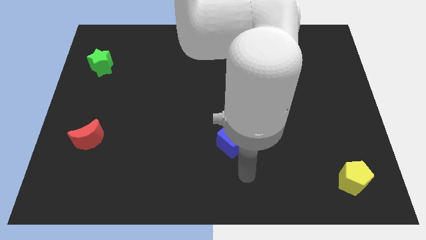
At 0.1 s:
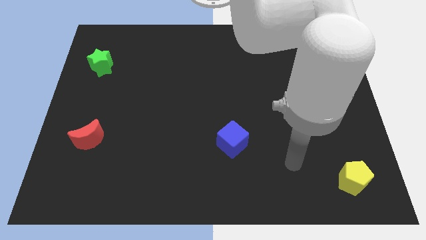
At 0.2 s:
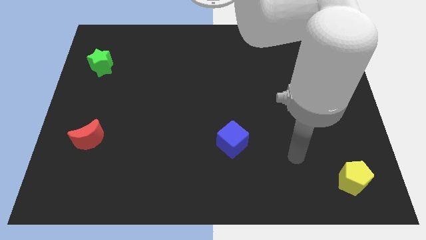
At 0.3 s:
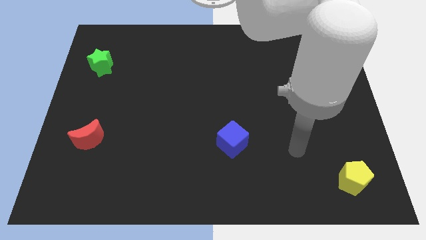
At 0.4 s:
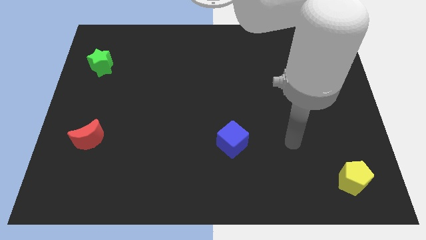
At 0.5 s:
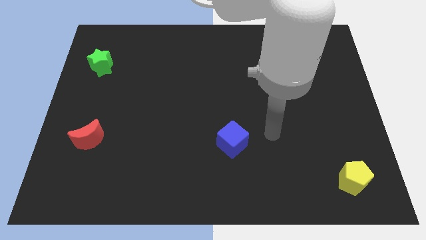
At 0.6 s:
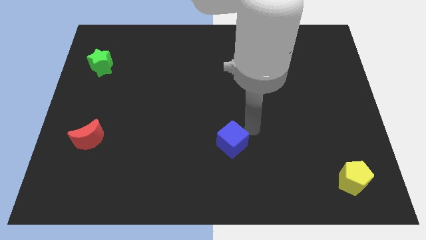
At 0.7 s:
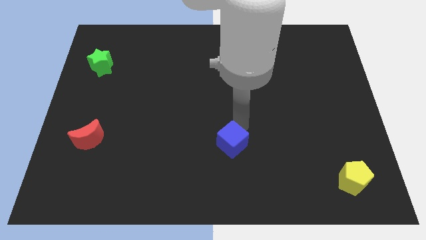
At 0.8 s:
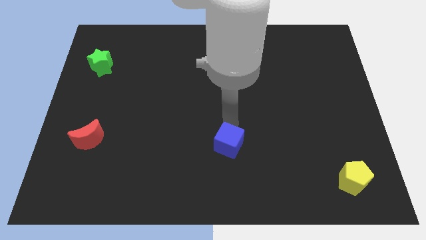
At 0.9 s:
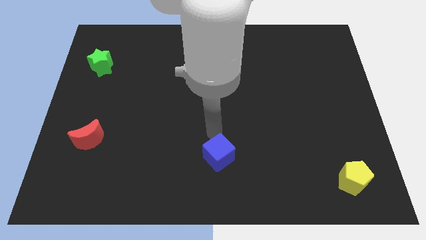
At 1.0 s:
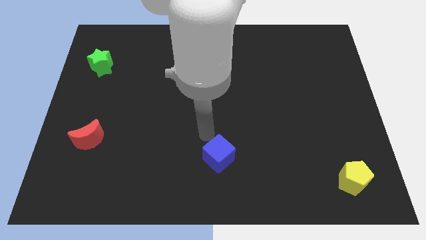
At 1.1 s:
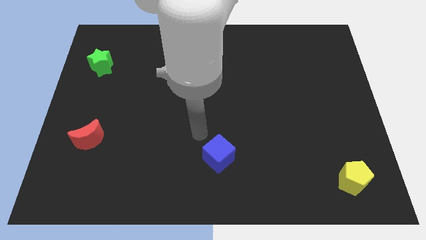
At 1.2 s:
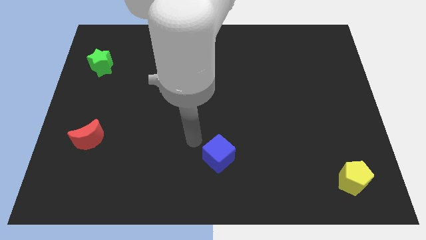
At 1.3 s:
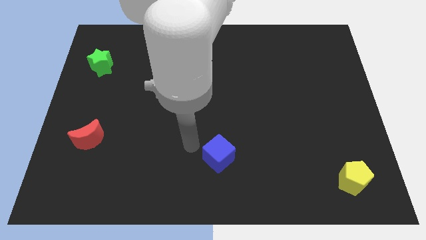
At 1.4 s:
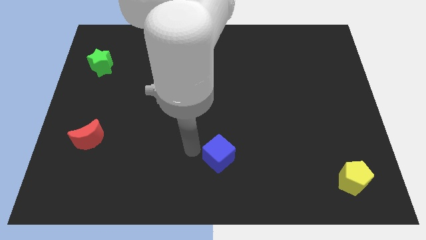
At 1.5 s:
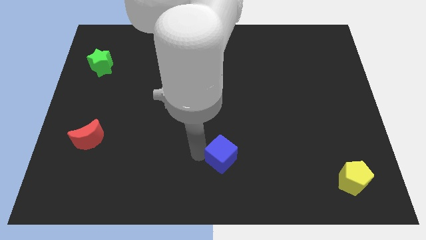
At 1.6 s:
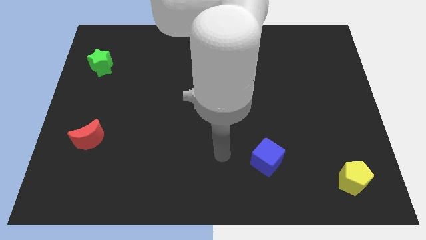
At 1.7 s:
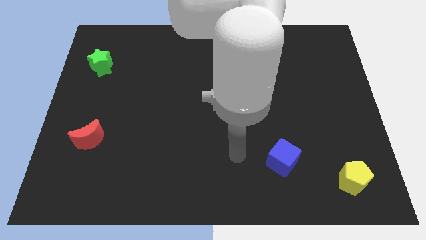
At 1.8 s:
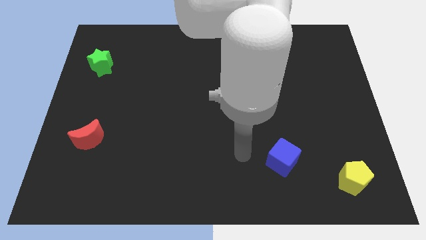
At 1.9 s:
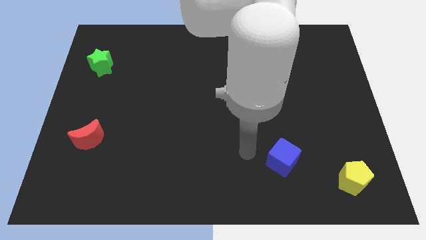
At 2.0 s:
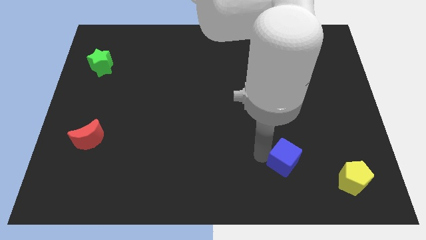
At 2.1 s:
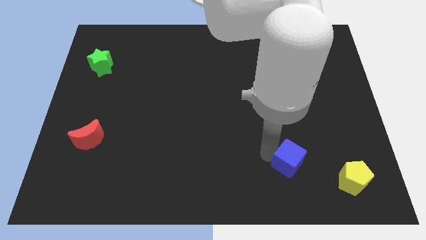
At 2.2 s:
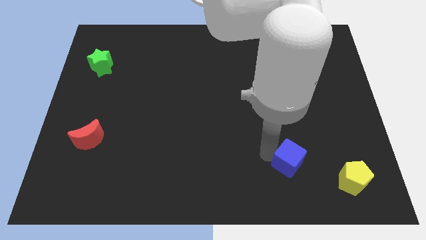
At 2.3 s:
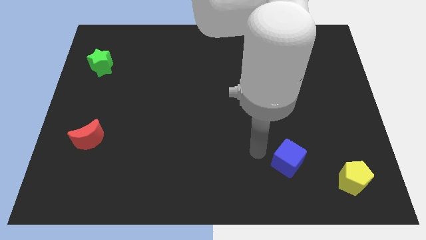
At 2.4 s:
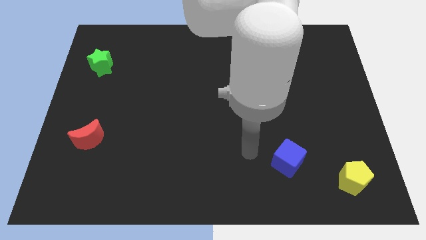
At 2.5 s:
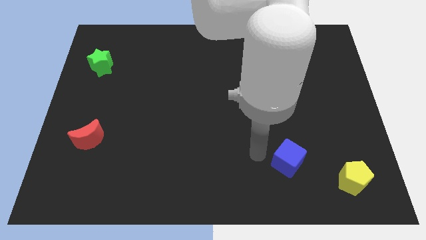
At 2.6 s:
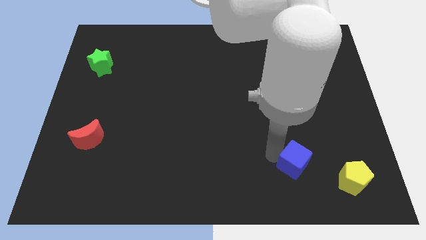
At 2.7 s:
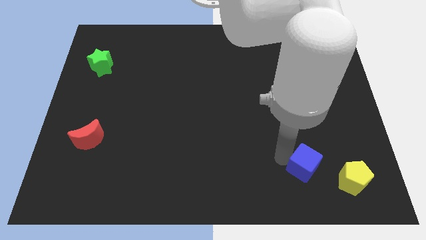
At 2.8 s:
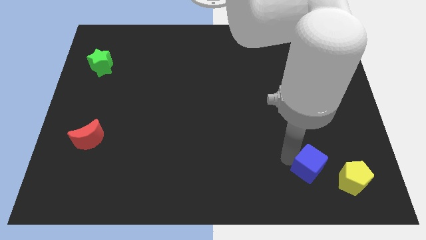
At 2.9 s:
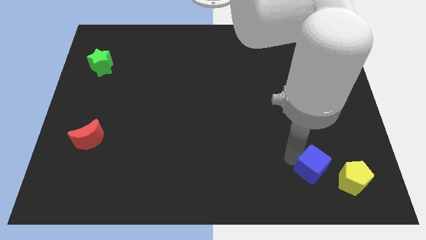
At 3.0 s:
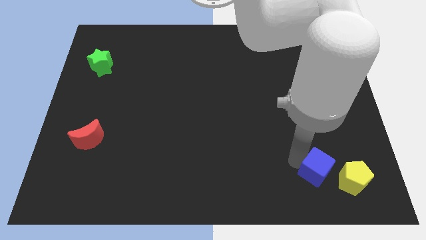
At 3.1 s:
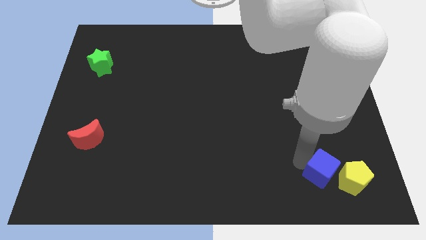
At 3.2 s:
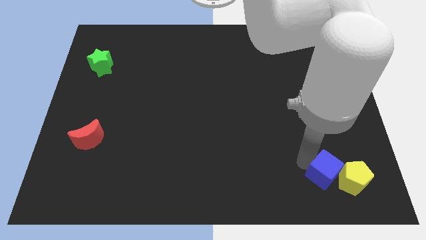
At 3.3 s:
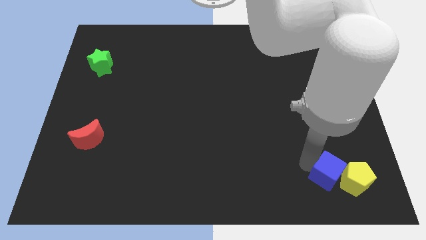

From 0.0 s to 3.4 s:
slide the blue block to the pentagon

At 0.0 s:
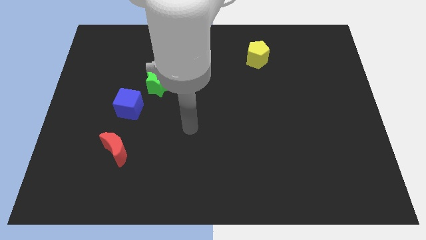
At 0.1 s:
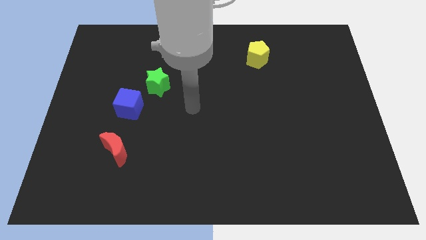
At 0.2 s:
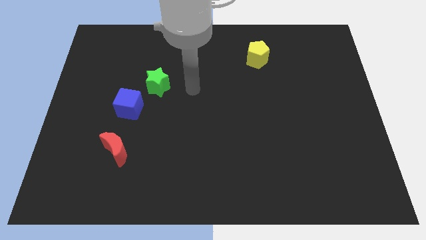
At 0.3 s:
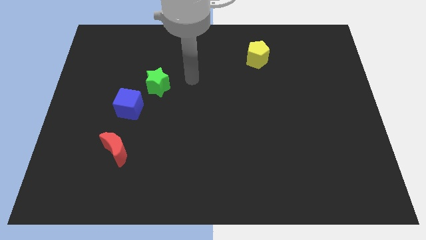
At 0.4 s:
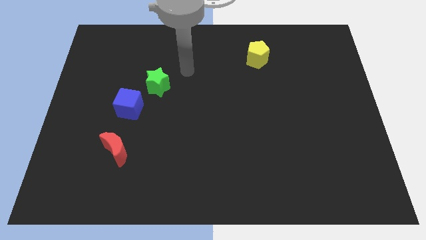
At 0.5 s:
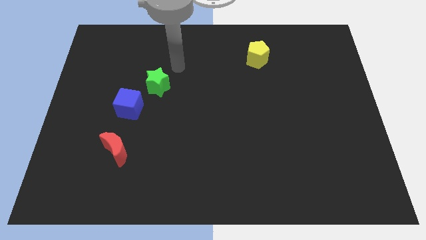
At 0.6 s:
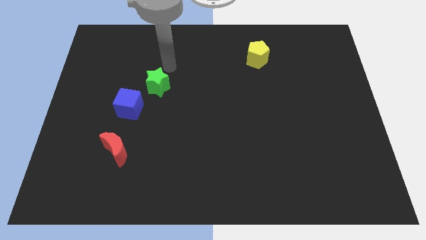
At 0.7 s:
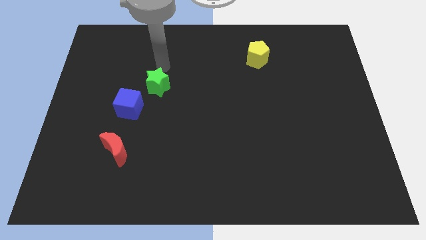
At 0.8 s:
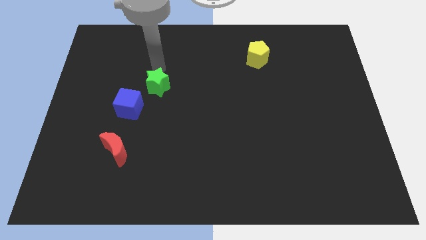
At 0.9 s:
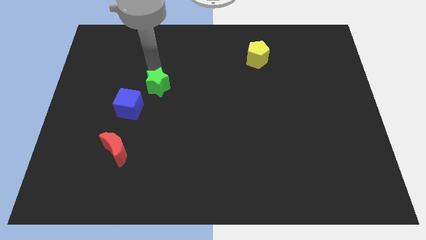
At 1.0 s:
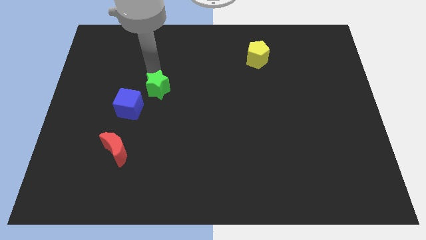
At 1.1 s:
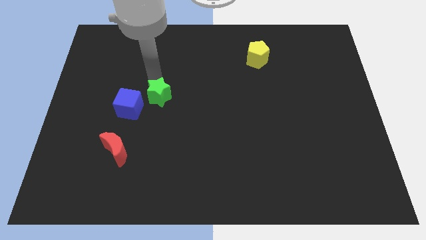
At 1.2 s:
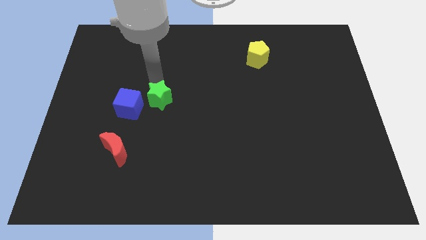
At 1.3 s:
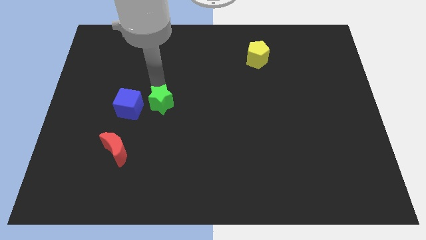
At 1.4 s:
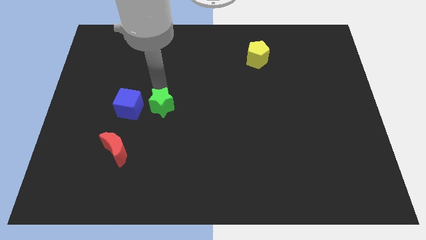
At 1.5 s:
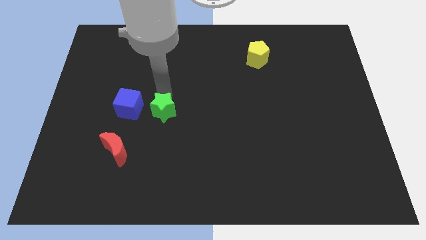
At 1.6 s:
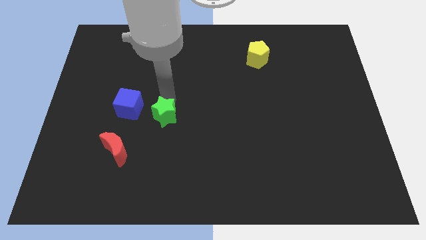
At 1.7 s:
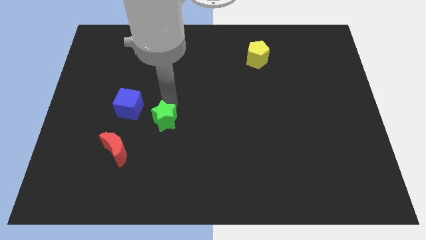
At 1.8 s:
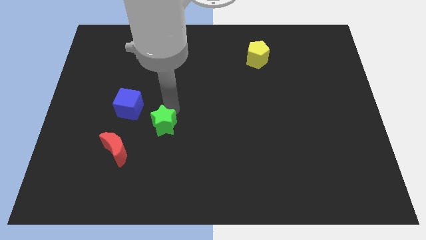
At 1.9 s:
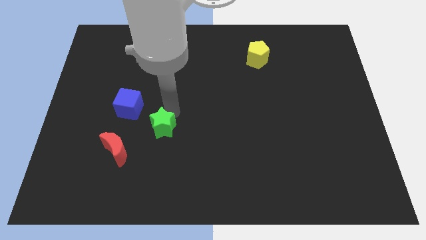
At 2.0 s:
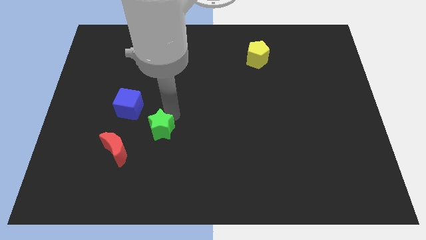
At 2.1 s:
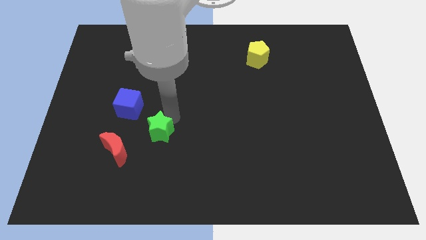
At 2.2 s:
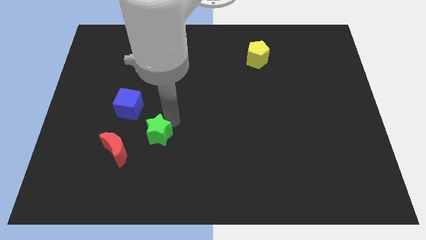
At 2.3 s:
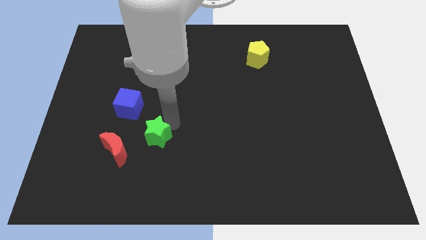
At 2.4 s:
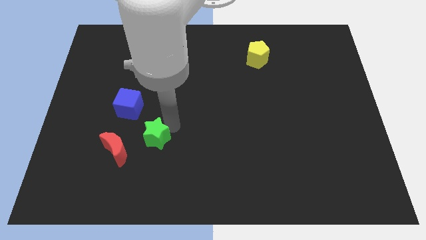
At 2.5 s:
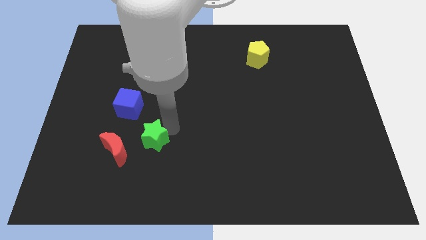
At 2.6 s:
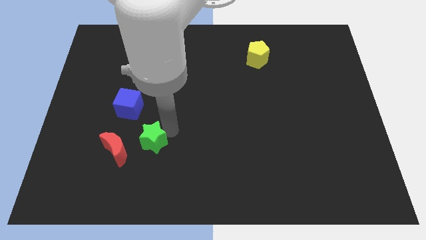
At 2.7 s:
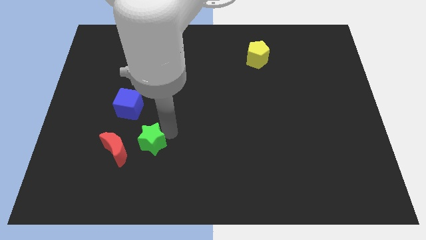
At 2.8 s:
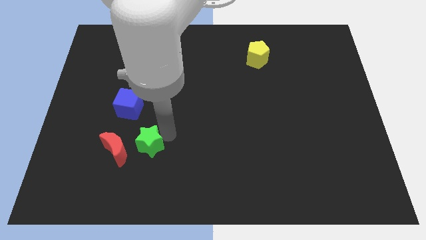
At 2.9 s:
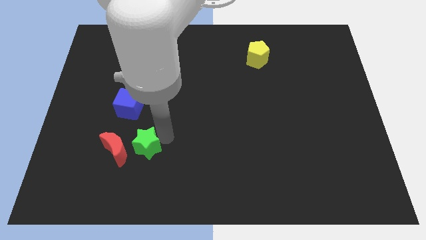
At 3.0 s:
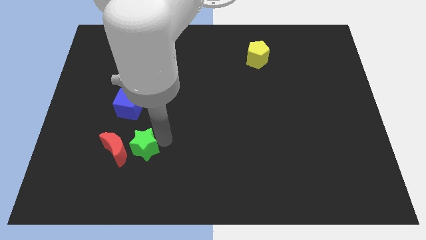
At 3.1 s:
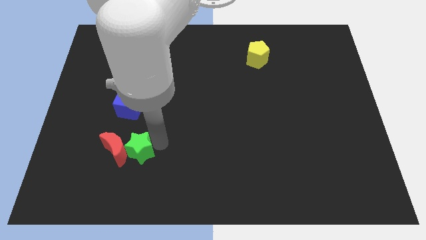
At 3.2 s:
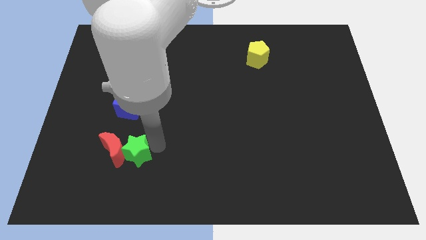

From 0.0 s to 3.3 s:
put the green block towards the red moon

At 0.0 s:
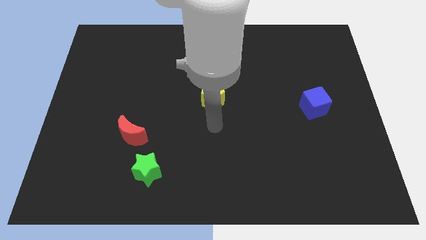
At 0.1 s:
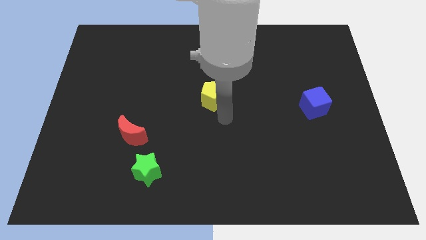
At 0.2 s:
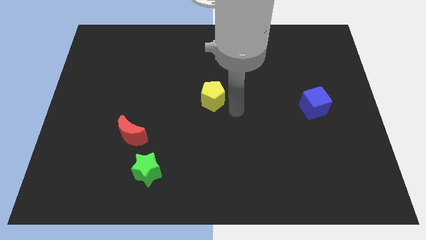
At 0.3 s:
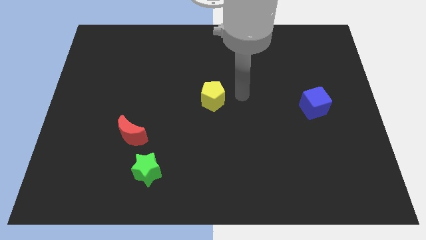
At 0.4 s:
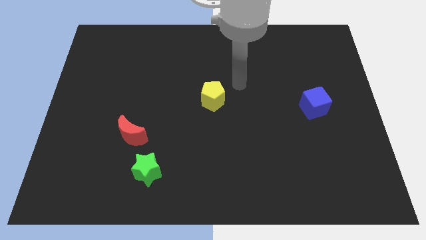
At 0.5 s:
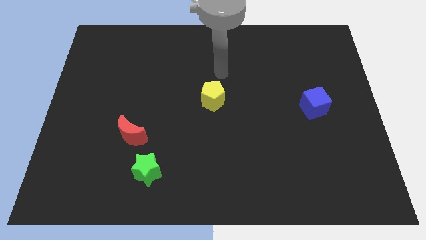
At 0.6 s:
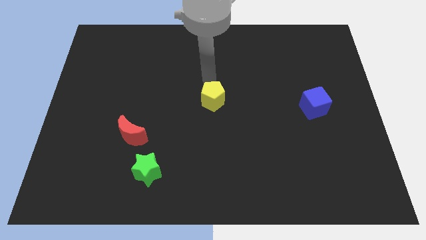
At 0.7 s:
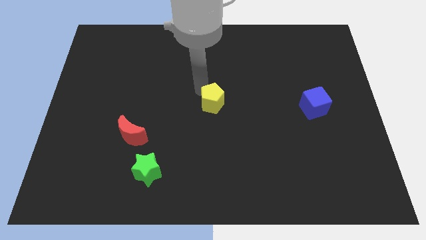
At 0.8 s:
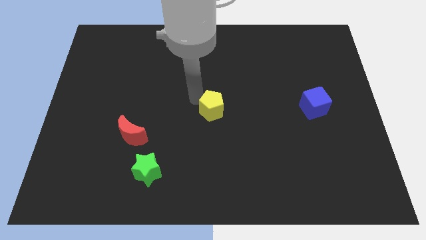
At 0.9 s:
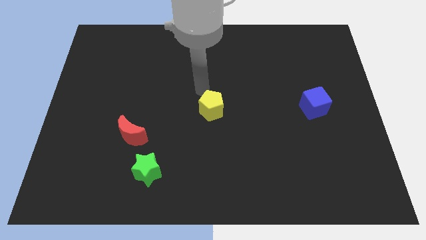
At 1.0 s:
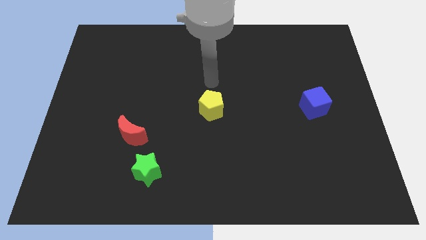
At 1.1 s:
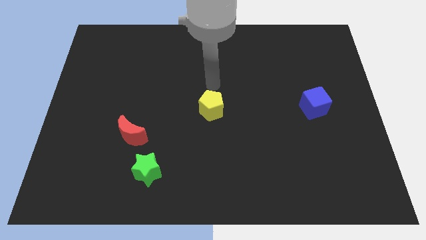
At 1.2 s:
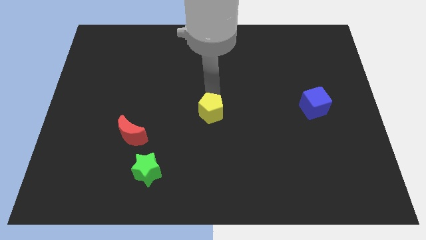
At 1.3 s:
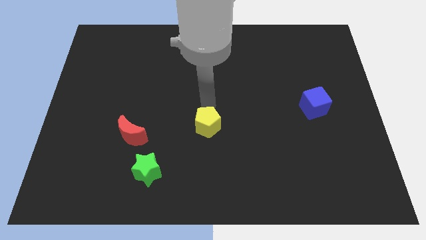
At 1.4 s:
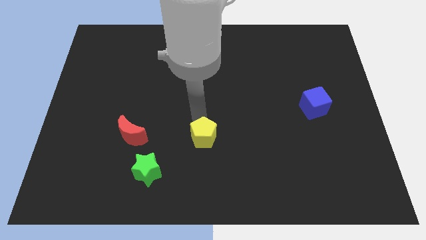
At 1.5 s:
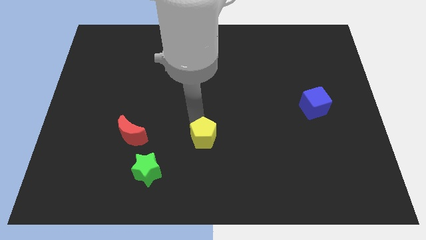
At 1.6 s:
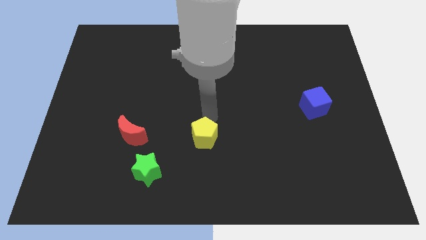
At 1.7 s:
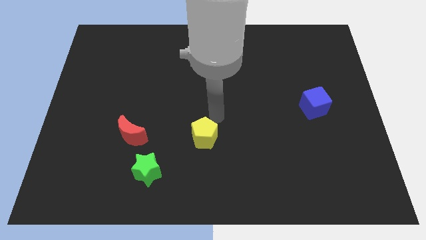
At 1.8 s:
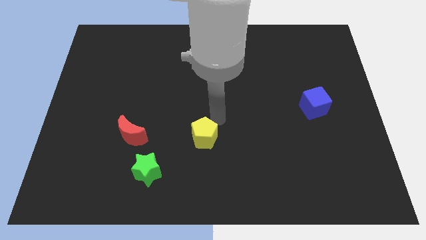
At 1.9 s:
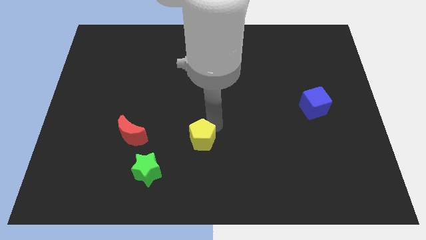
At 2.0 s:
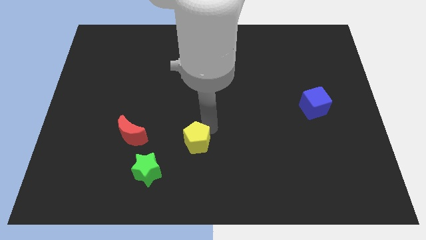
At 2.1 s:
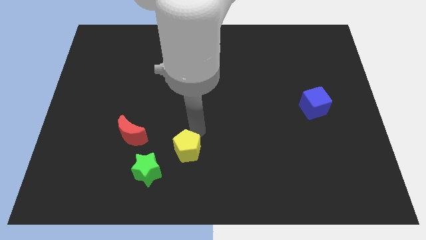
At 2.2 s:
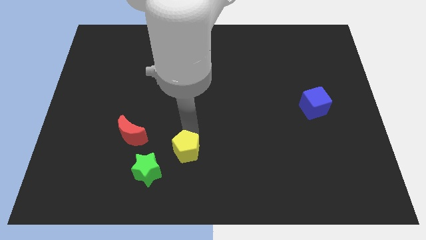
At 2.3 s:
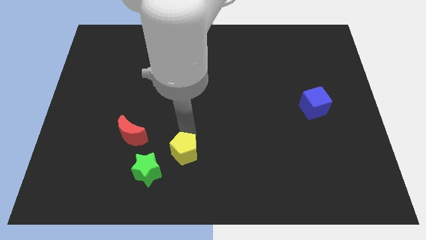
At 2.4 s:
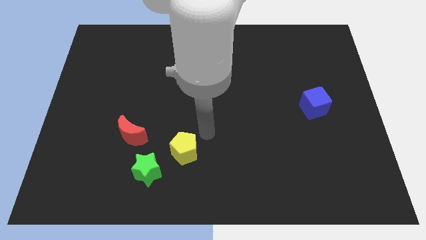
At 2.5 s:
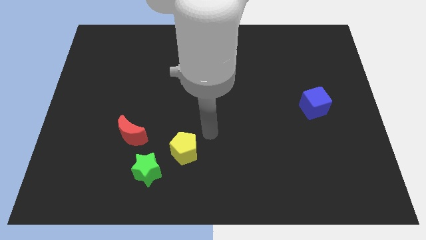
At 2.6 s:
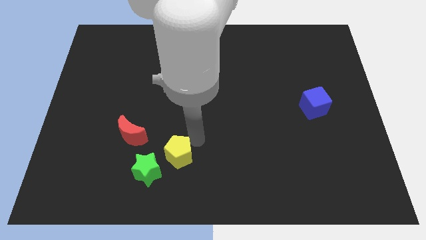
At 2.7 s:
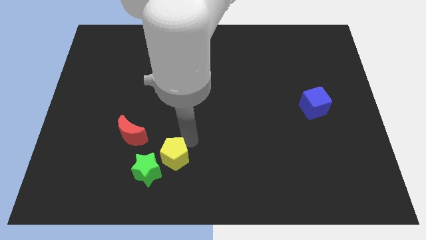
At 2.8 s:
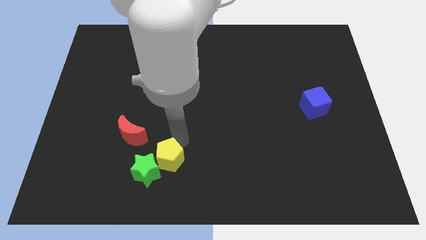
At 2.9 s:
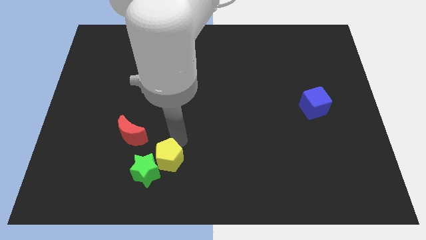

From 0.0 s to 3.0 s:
put the yellow block next to the green star
